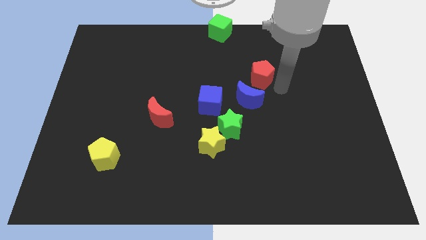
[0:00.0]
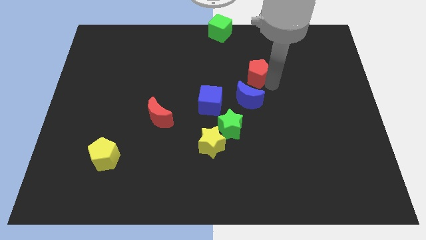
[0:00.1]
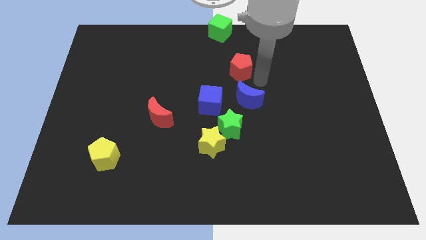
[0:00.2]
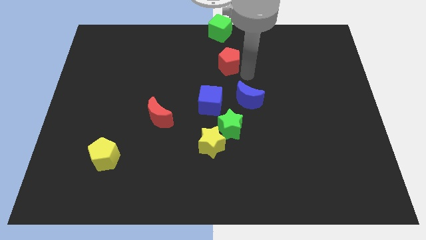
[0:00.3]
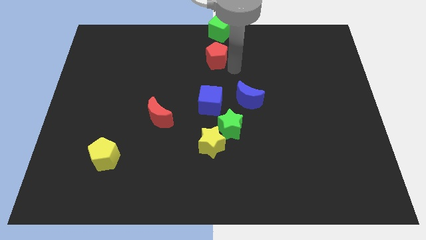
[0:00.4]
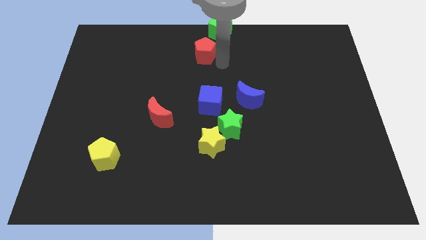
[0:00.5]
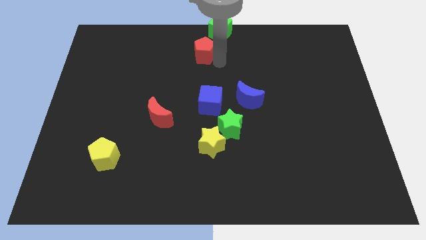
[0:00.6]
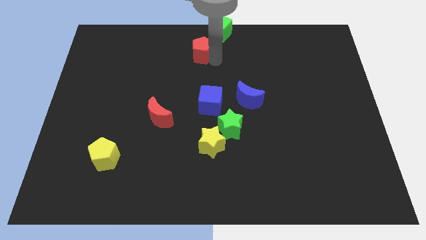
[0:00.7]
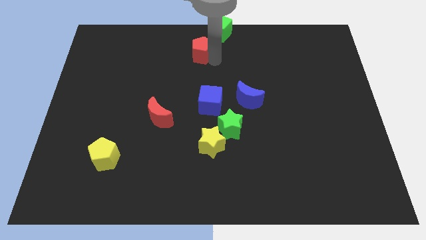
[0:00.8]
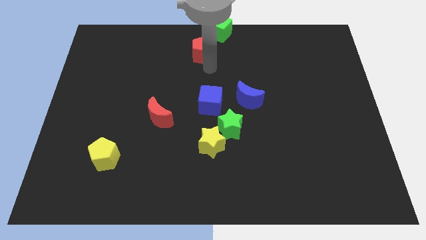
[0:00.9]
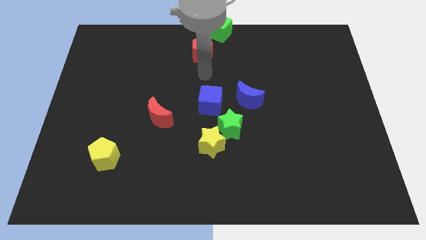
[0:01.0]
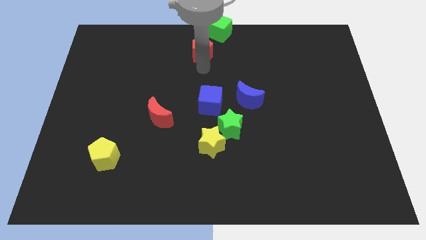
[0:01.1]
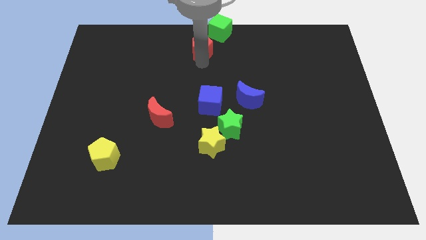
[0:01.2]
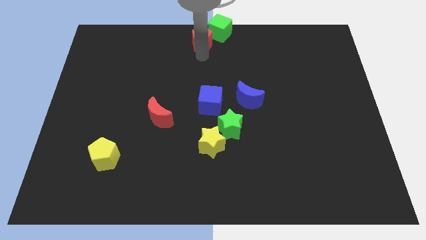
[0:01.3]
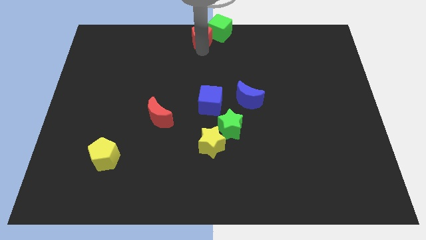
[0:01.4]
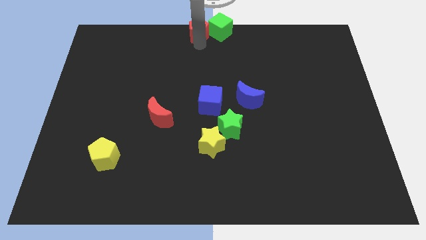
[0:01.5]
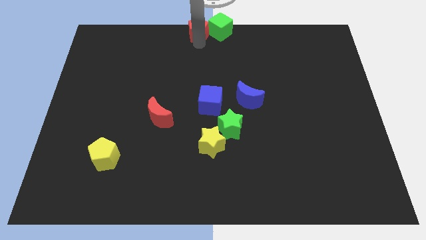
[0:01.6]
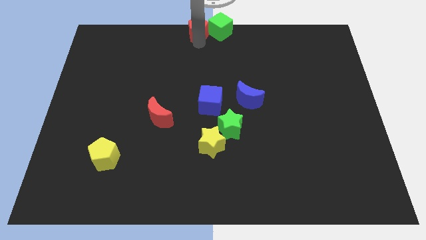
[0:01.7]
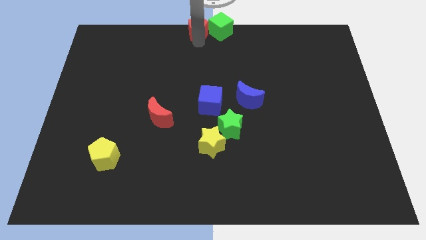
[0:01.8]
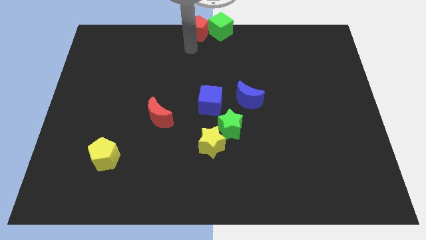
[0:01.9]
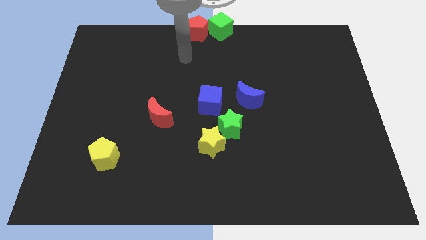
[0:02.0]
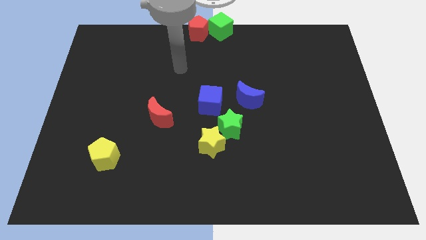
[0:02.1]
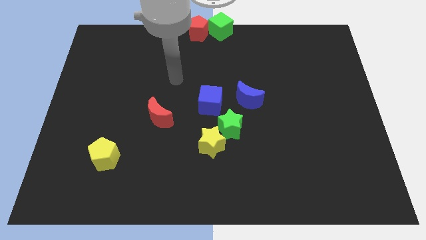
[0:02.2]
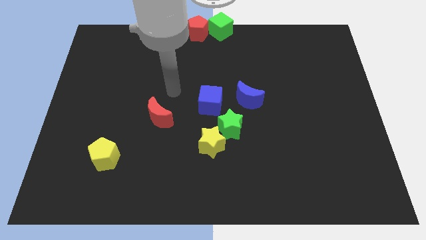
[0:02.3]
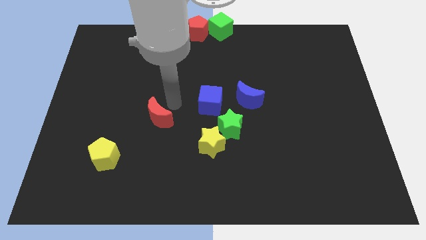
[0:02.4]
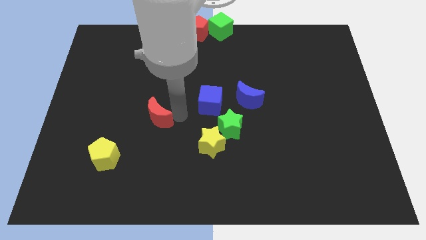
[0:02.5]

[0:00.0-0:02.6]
move the red pentagon to the left of the green cube

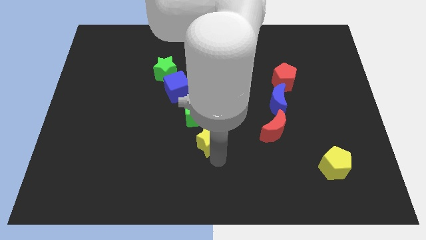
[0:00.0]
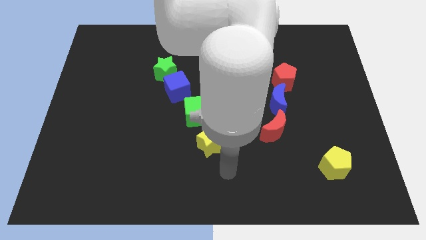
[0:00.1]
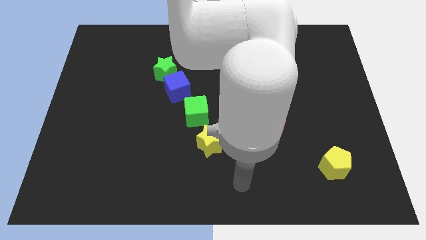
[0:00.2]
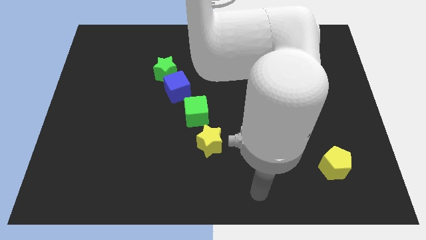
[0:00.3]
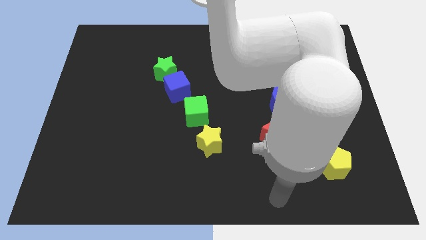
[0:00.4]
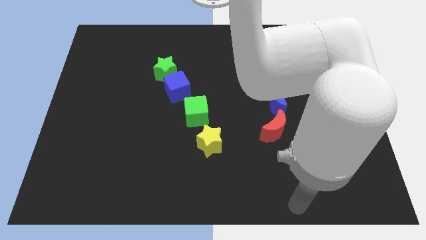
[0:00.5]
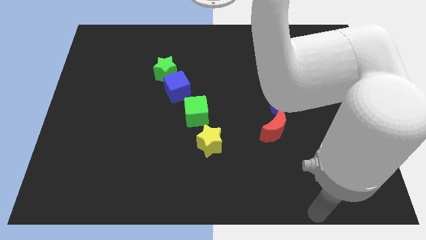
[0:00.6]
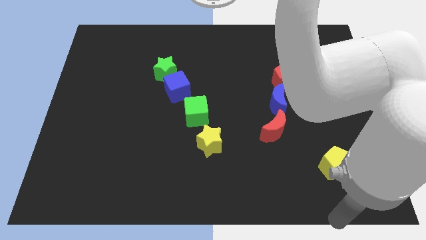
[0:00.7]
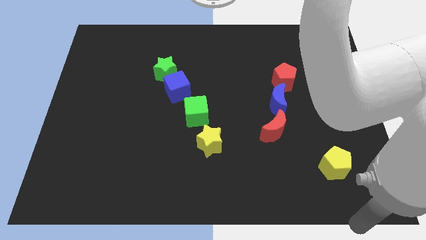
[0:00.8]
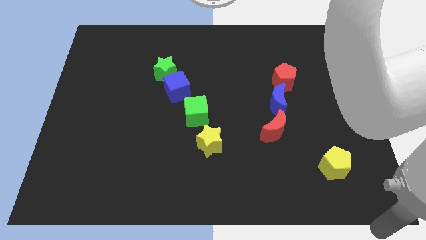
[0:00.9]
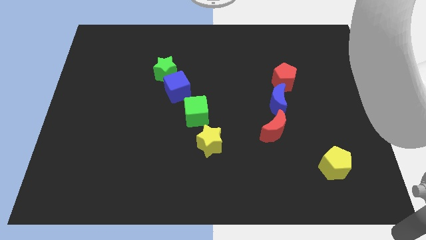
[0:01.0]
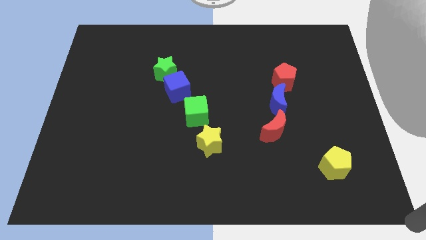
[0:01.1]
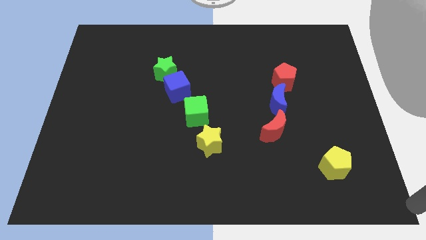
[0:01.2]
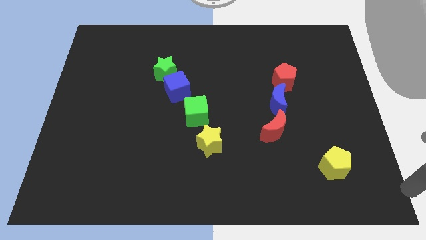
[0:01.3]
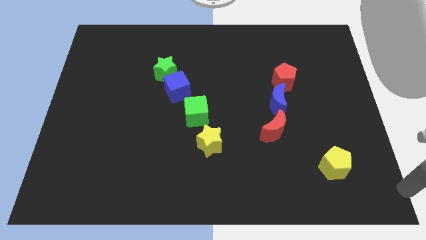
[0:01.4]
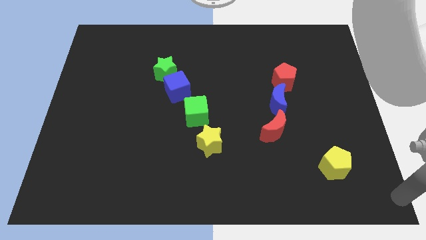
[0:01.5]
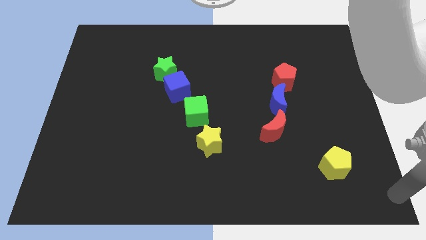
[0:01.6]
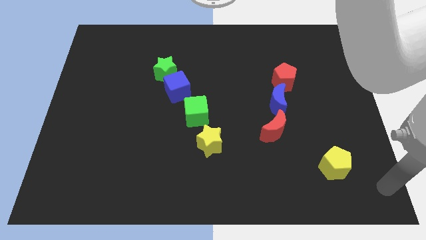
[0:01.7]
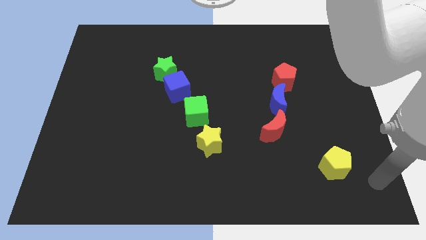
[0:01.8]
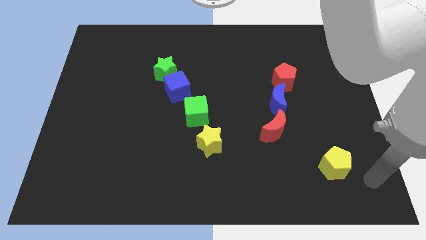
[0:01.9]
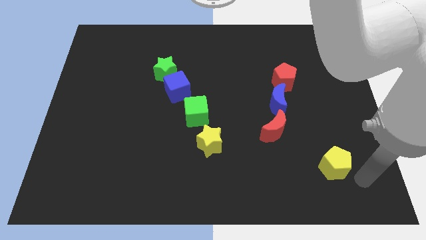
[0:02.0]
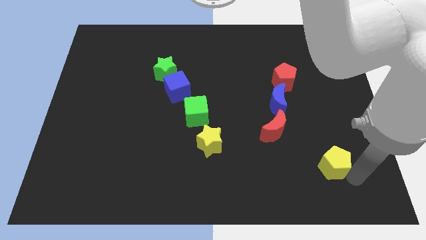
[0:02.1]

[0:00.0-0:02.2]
move your arm to the right of yellow pentagon

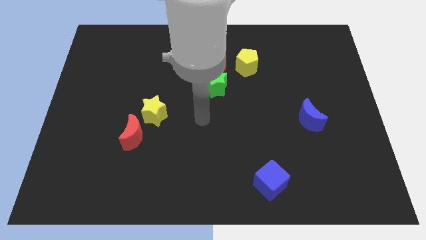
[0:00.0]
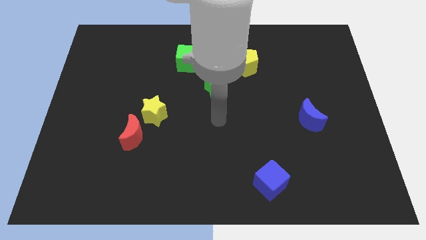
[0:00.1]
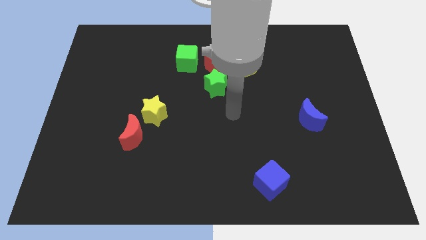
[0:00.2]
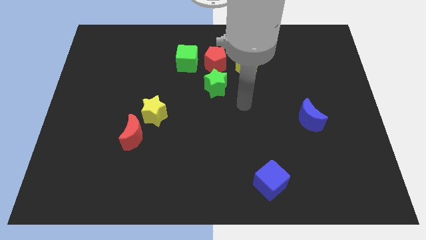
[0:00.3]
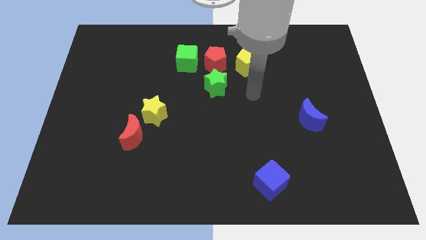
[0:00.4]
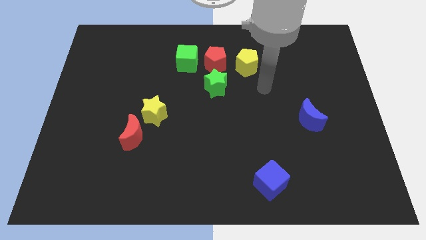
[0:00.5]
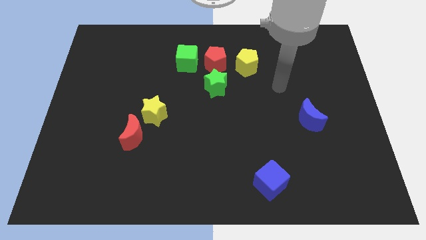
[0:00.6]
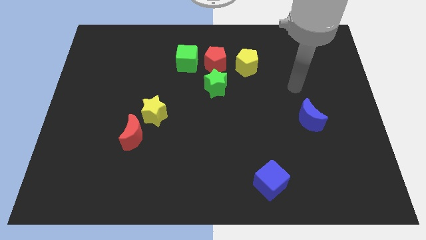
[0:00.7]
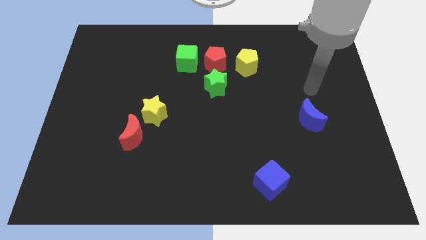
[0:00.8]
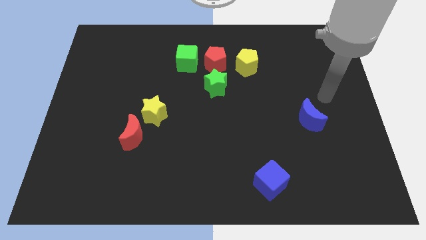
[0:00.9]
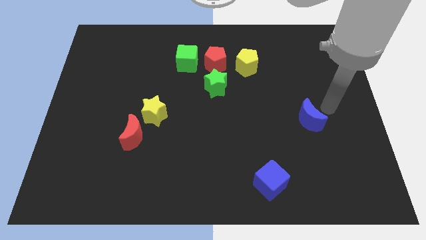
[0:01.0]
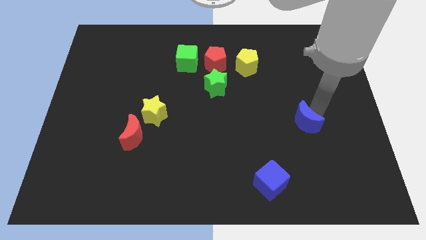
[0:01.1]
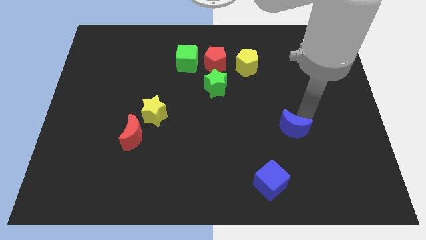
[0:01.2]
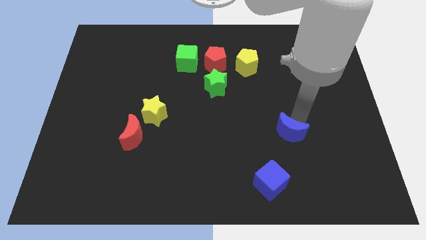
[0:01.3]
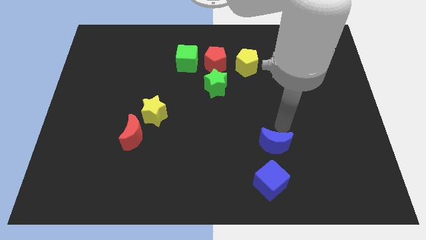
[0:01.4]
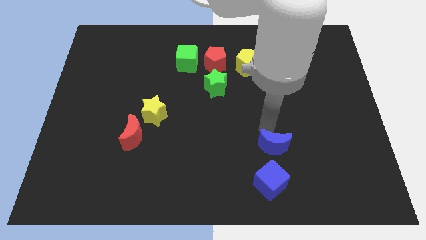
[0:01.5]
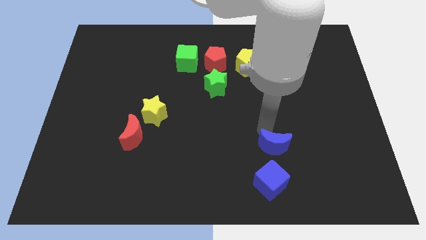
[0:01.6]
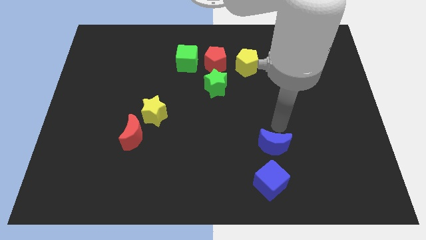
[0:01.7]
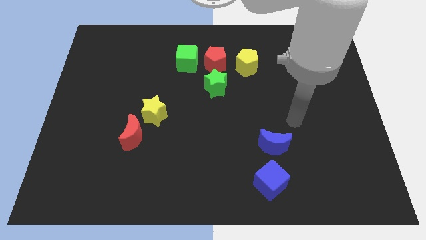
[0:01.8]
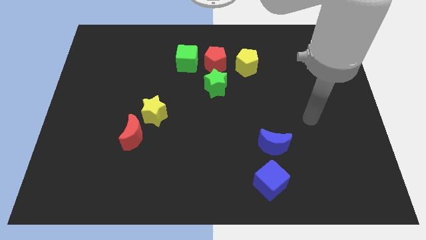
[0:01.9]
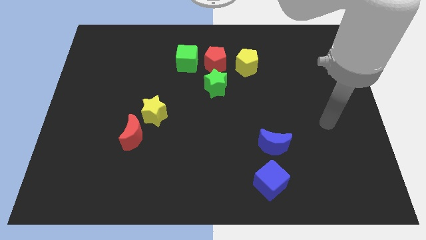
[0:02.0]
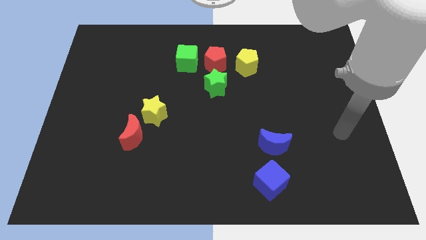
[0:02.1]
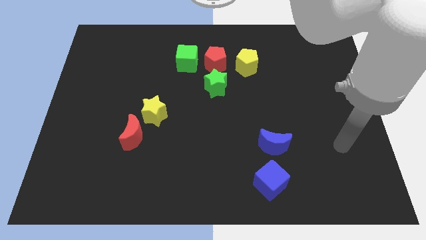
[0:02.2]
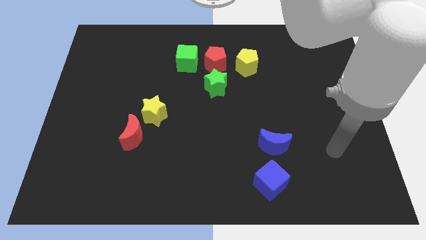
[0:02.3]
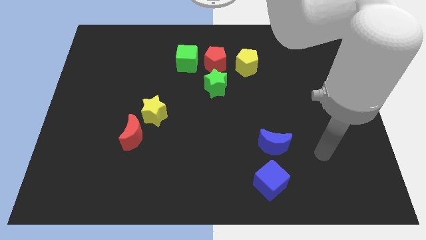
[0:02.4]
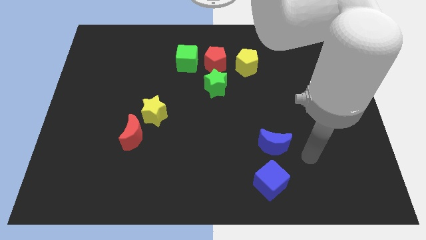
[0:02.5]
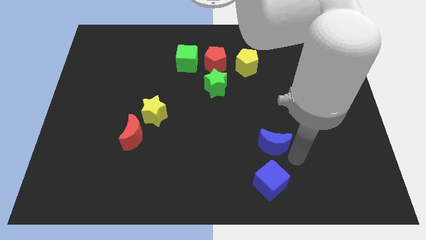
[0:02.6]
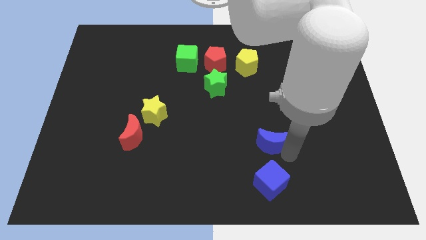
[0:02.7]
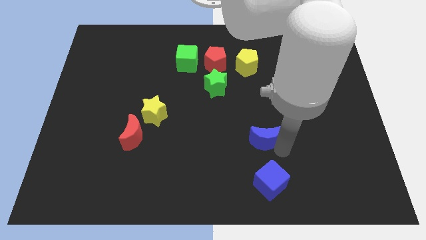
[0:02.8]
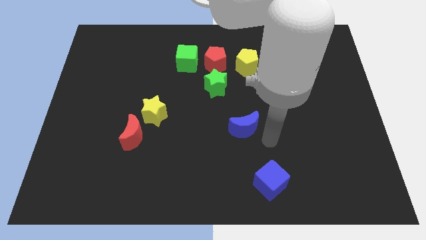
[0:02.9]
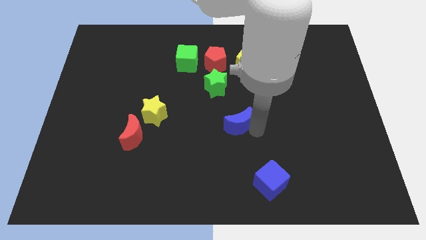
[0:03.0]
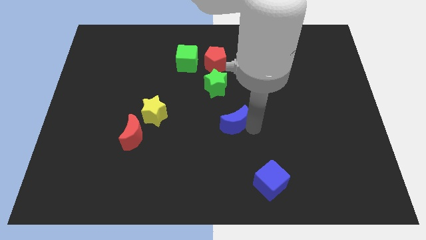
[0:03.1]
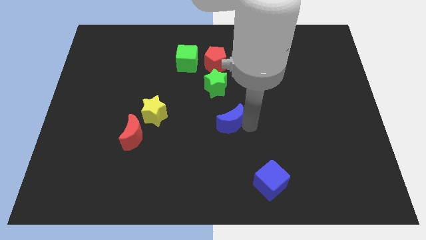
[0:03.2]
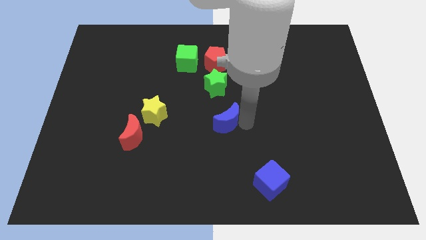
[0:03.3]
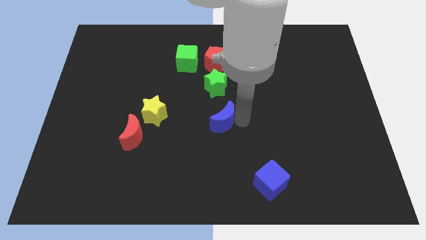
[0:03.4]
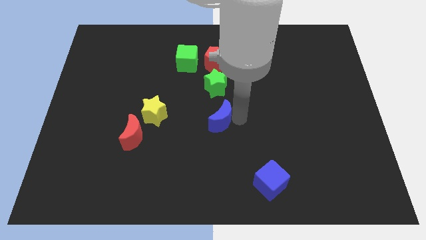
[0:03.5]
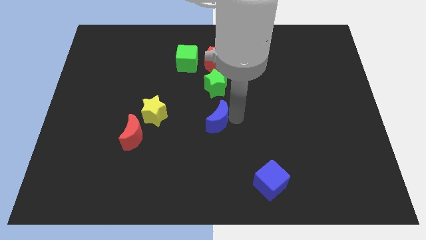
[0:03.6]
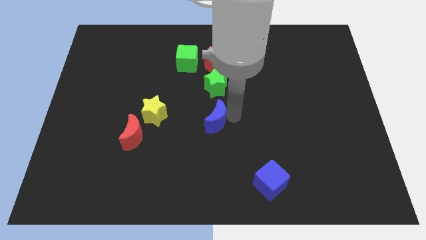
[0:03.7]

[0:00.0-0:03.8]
move the blue crescent to the center of the board

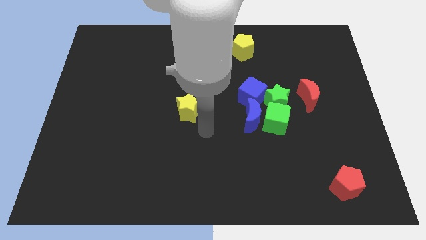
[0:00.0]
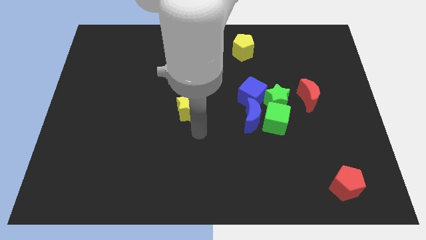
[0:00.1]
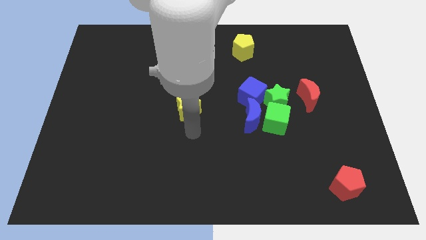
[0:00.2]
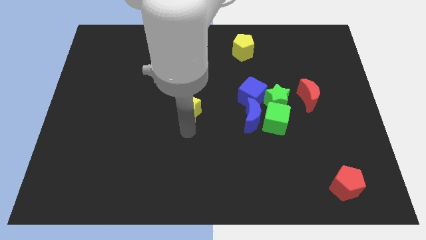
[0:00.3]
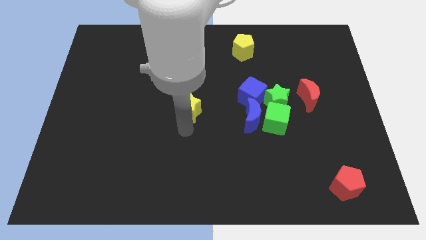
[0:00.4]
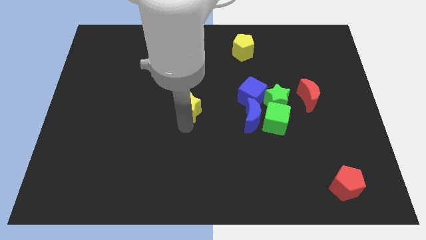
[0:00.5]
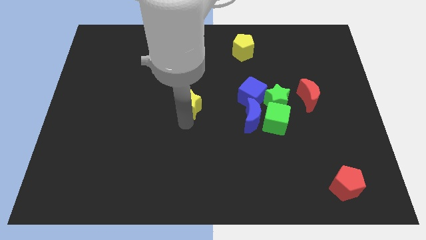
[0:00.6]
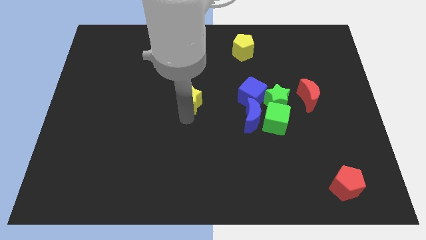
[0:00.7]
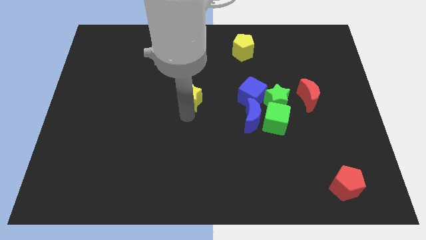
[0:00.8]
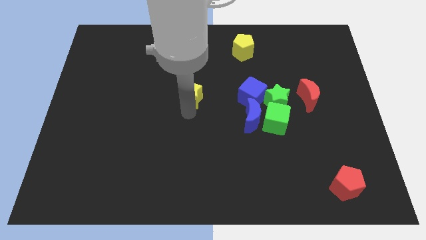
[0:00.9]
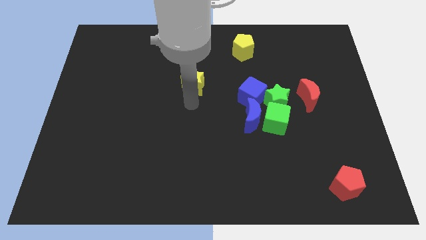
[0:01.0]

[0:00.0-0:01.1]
move the yellow star to the left of the blue cube
